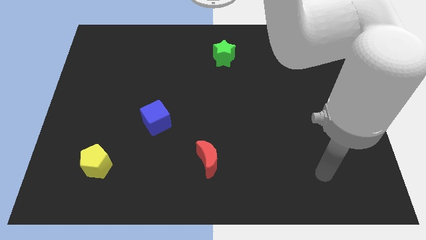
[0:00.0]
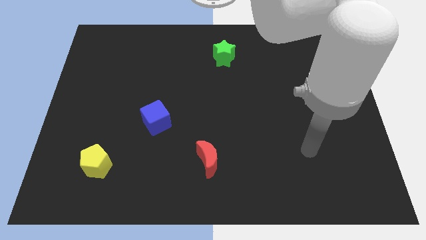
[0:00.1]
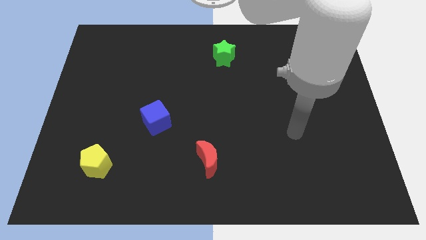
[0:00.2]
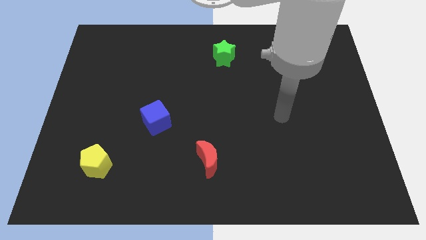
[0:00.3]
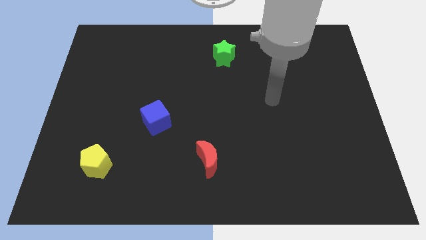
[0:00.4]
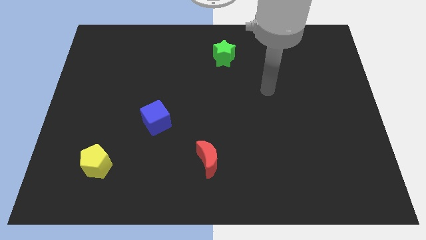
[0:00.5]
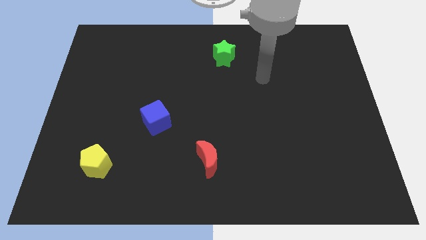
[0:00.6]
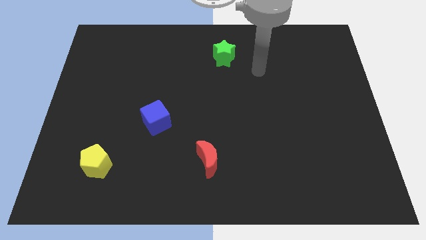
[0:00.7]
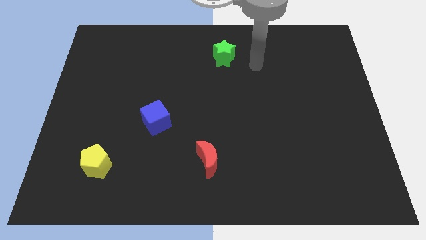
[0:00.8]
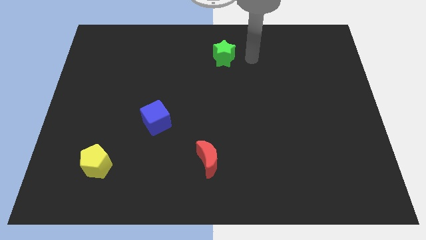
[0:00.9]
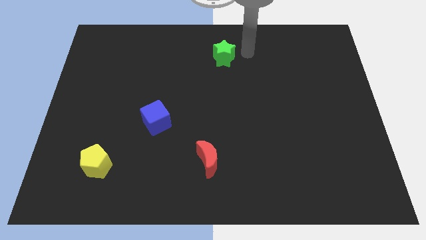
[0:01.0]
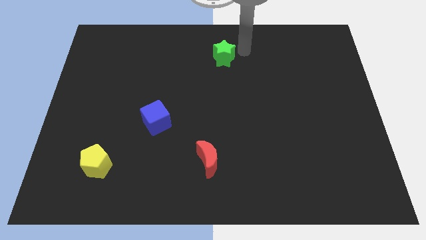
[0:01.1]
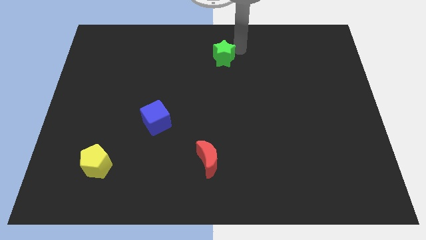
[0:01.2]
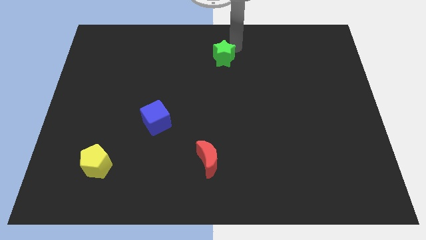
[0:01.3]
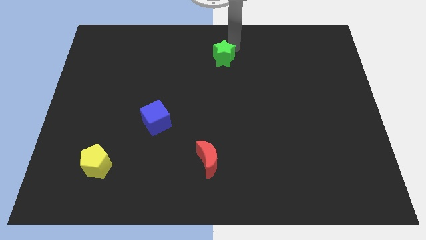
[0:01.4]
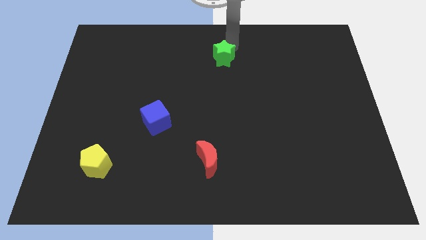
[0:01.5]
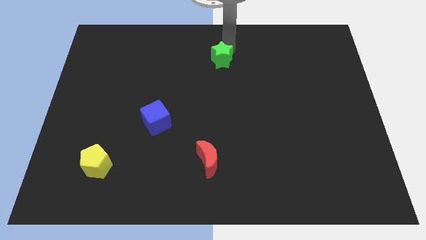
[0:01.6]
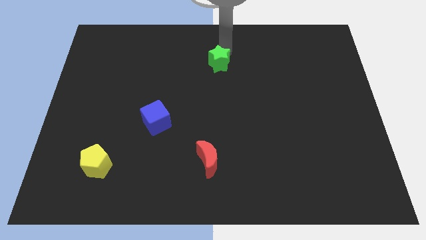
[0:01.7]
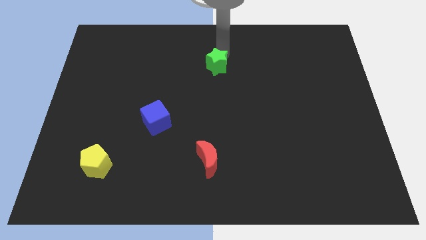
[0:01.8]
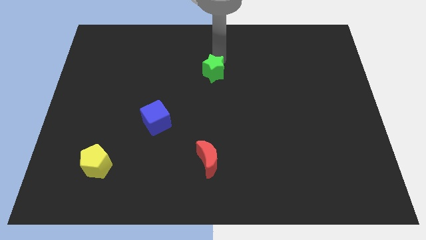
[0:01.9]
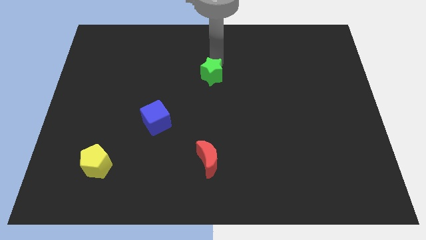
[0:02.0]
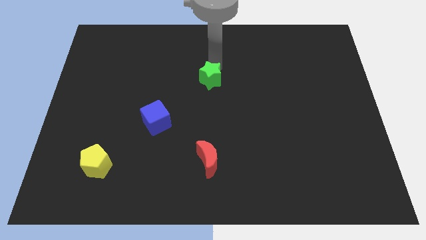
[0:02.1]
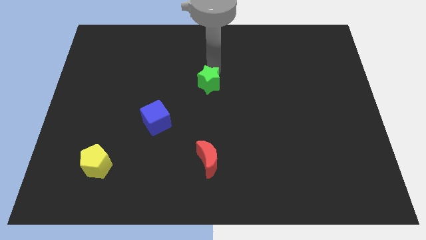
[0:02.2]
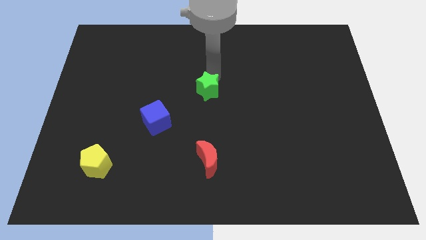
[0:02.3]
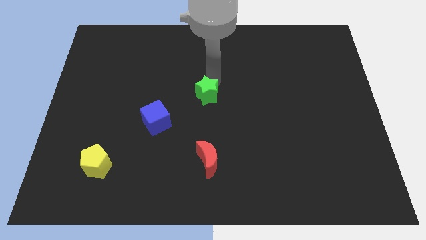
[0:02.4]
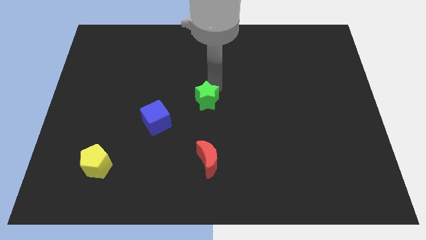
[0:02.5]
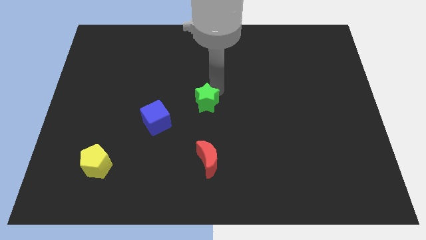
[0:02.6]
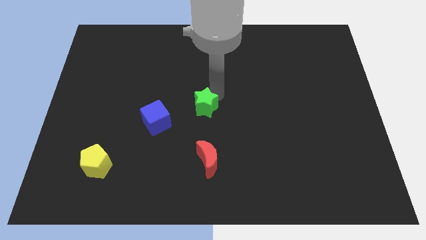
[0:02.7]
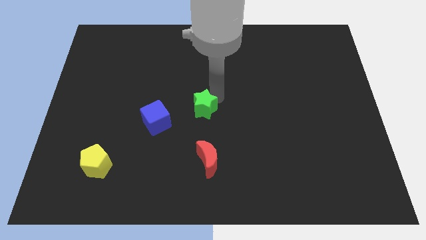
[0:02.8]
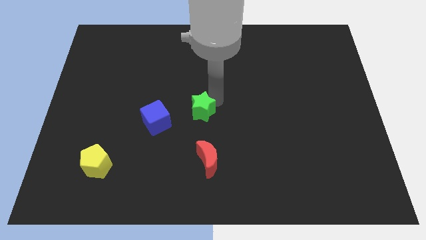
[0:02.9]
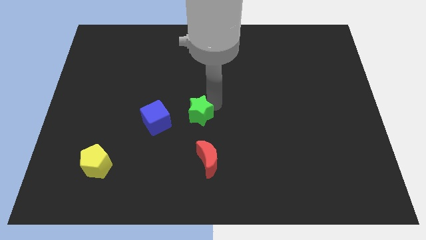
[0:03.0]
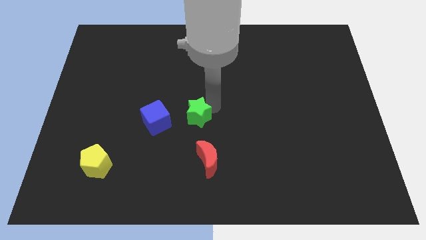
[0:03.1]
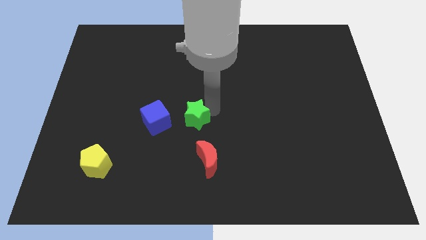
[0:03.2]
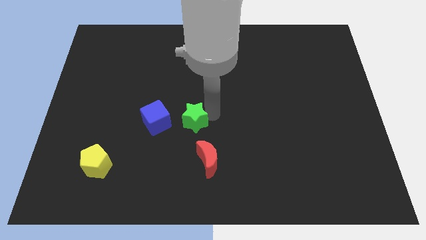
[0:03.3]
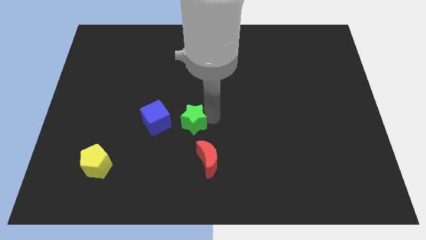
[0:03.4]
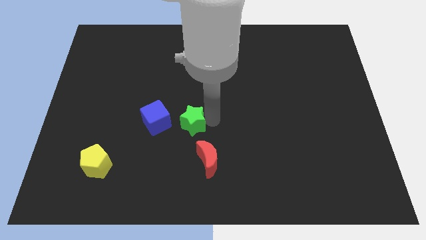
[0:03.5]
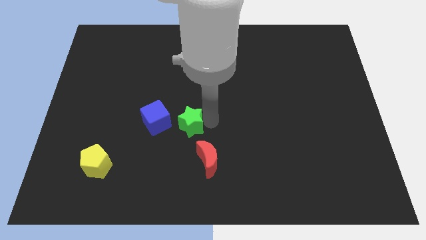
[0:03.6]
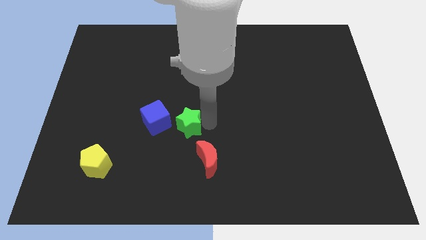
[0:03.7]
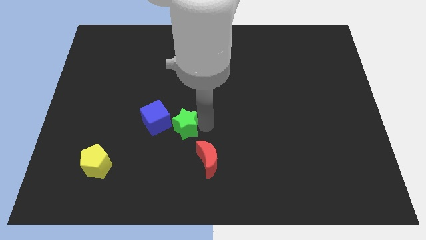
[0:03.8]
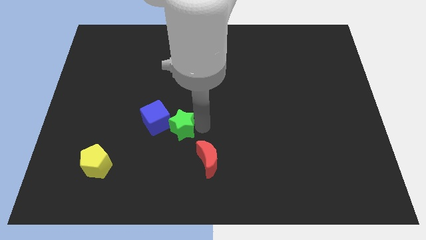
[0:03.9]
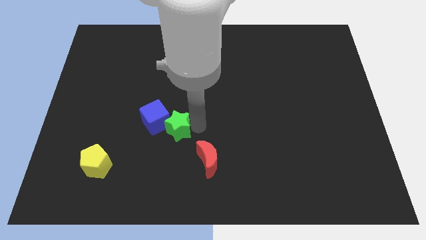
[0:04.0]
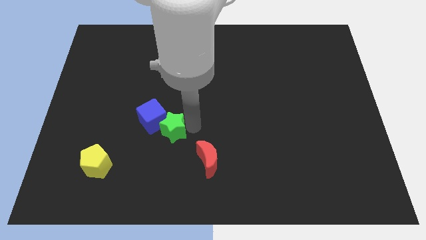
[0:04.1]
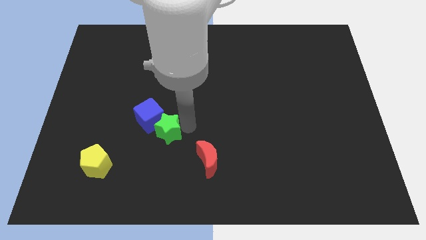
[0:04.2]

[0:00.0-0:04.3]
move the green star close to the blue block

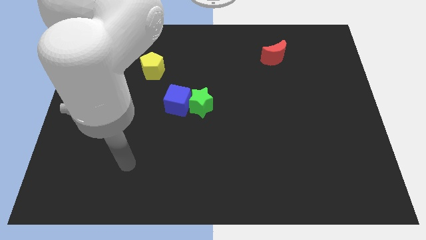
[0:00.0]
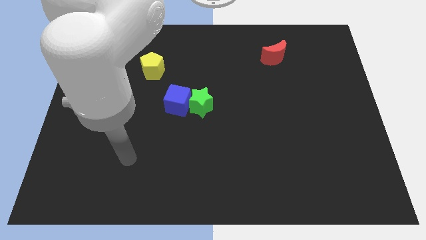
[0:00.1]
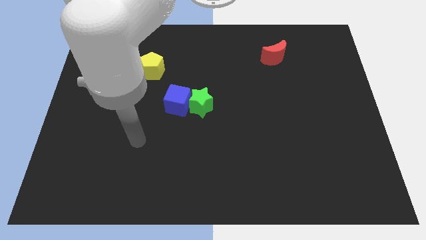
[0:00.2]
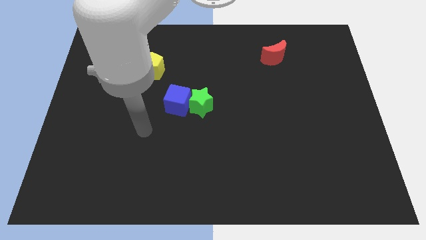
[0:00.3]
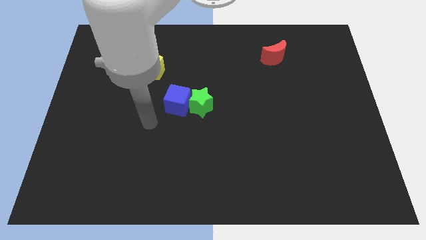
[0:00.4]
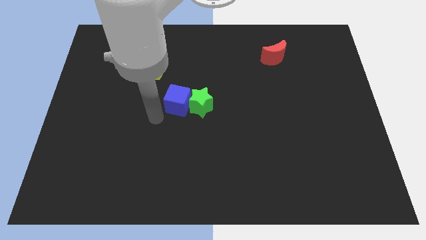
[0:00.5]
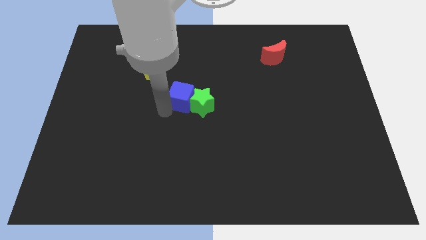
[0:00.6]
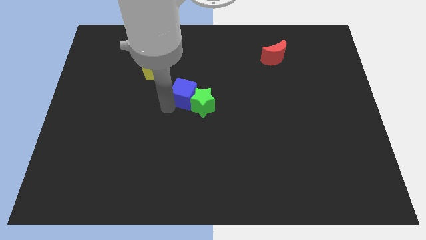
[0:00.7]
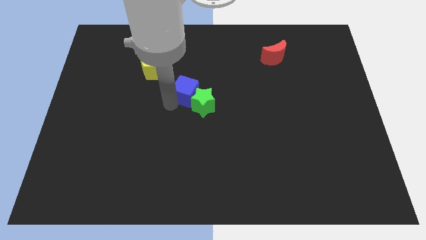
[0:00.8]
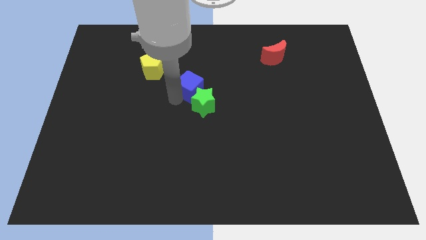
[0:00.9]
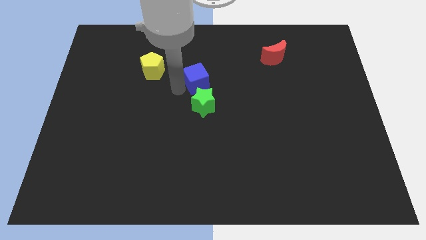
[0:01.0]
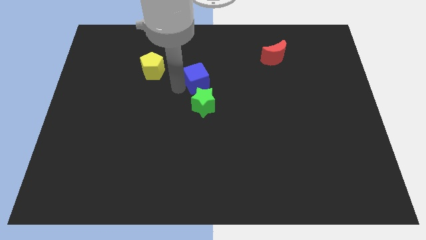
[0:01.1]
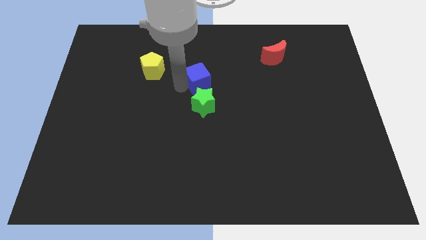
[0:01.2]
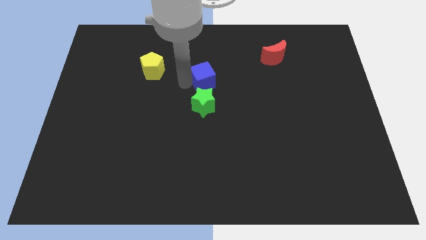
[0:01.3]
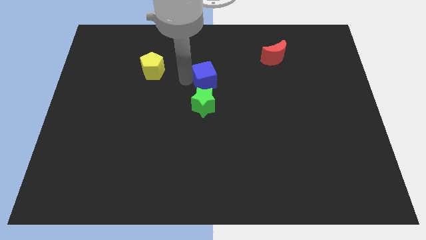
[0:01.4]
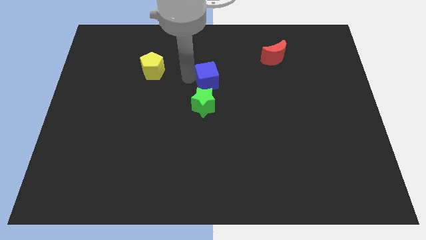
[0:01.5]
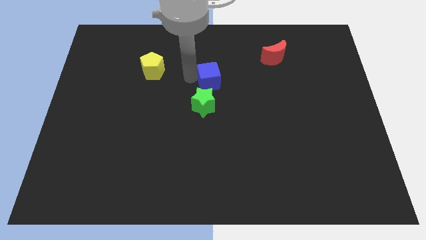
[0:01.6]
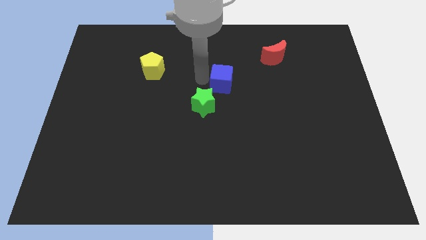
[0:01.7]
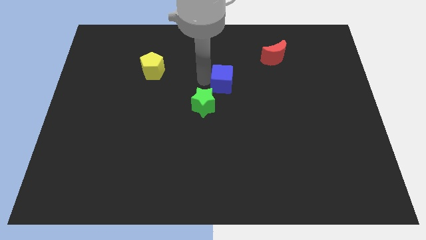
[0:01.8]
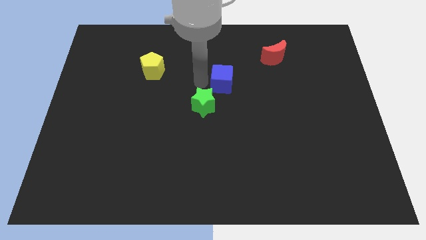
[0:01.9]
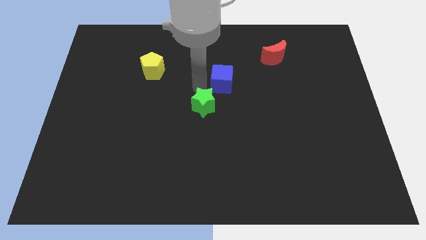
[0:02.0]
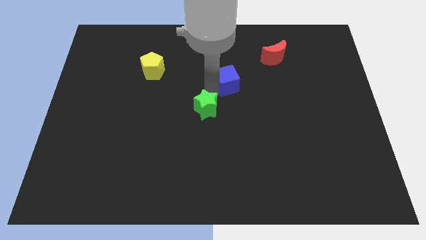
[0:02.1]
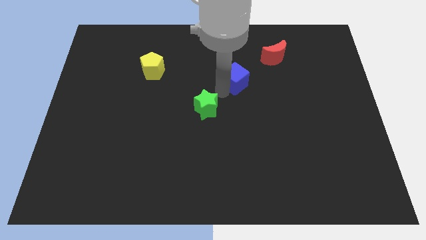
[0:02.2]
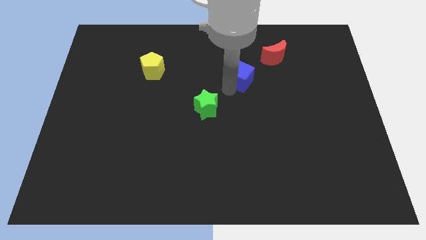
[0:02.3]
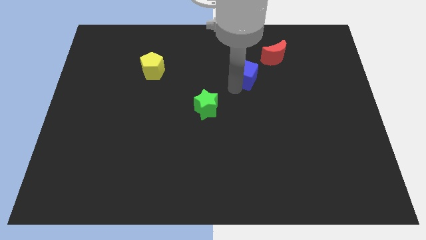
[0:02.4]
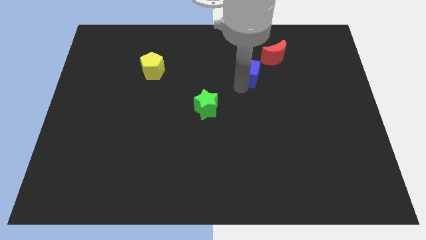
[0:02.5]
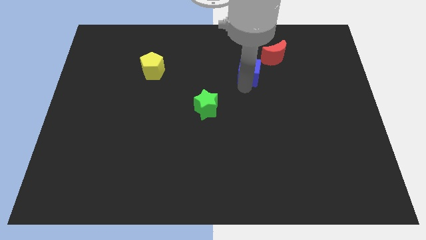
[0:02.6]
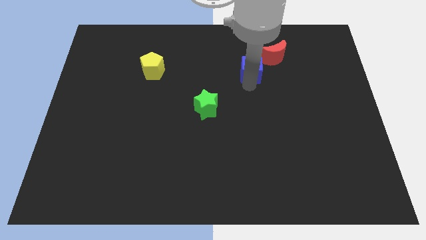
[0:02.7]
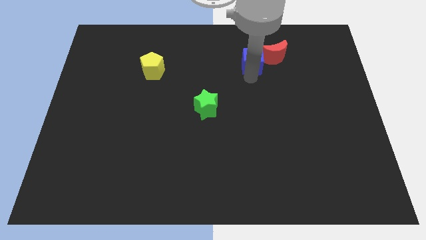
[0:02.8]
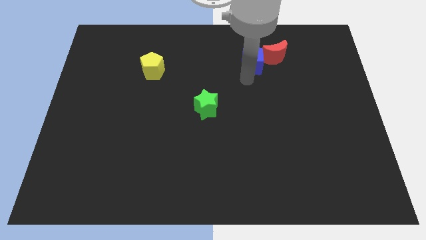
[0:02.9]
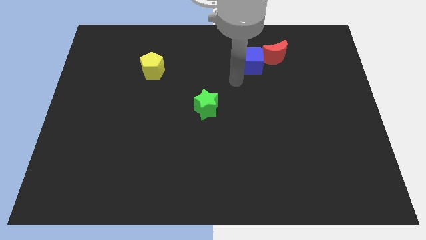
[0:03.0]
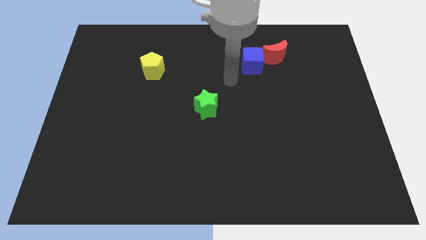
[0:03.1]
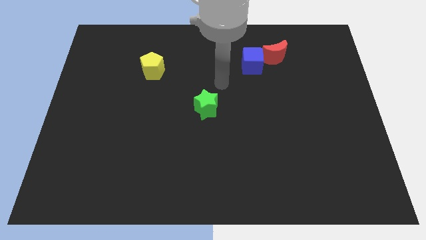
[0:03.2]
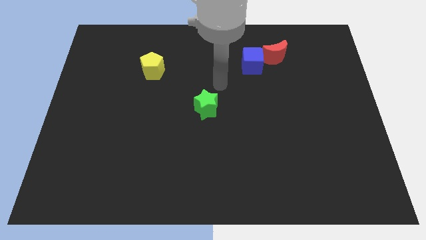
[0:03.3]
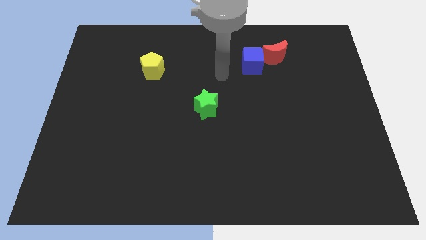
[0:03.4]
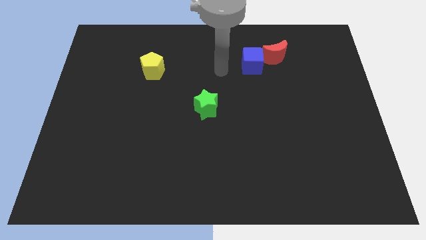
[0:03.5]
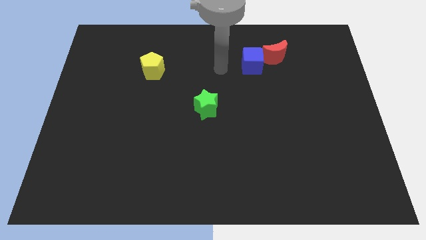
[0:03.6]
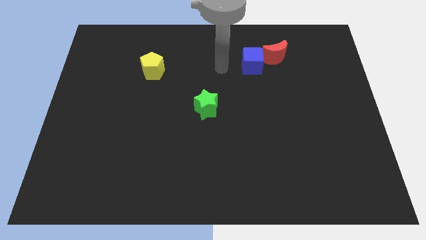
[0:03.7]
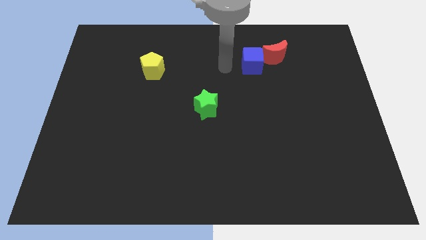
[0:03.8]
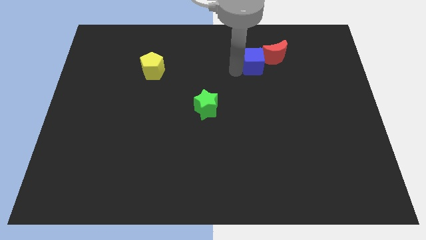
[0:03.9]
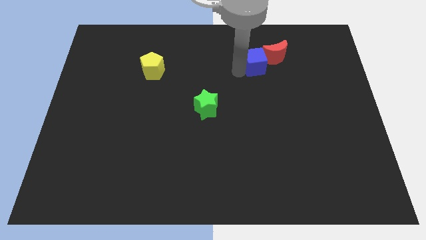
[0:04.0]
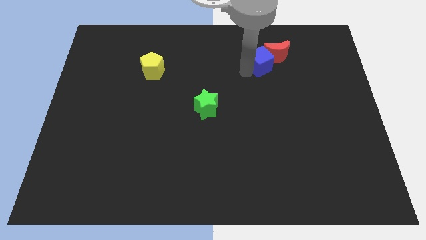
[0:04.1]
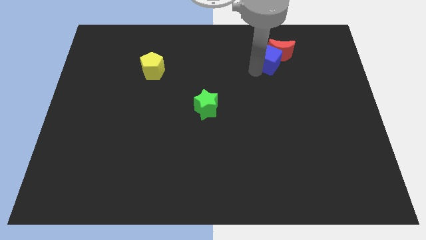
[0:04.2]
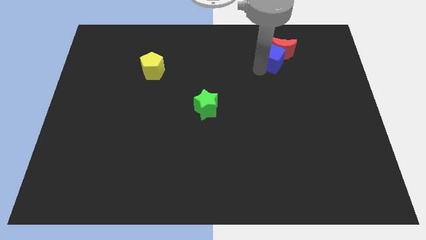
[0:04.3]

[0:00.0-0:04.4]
put the cube next to the red moon
